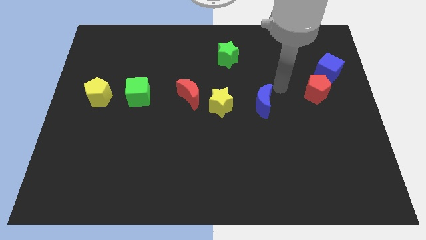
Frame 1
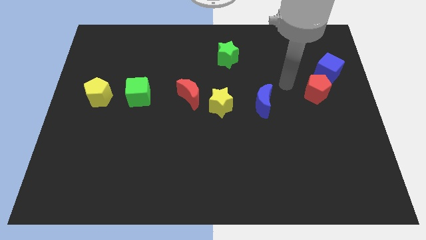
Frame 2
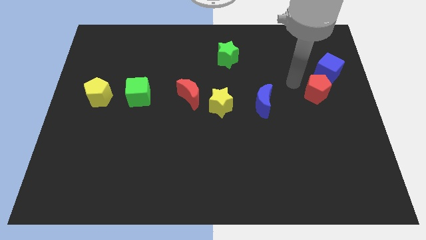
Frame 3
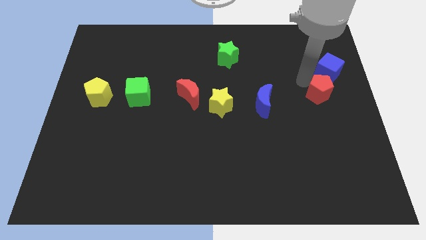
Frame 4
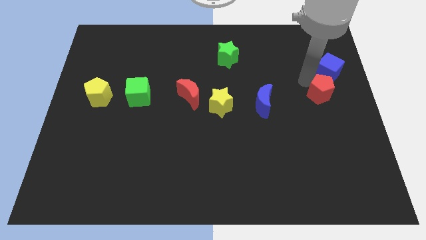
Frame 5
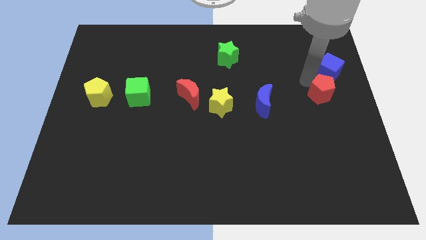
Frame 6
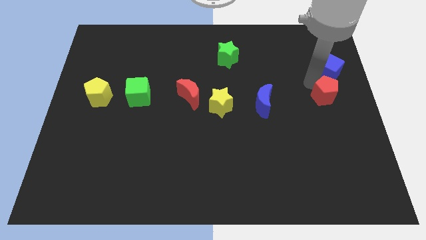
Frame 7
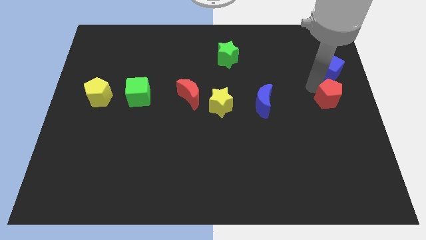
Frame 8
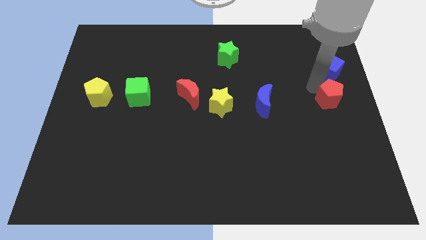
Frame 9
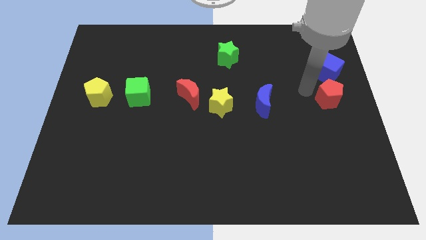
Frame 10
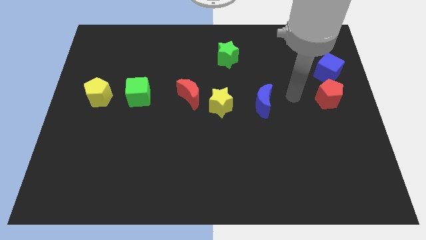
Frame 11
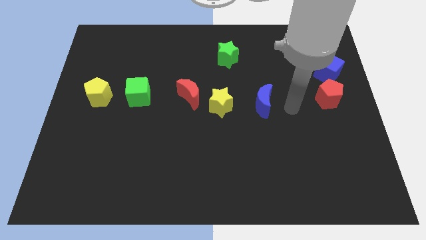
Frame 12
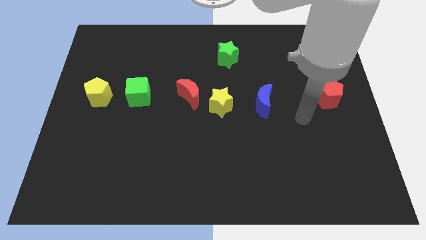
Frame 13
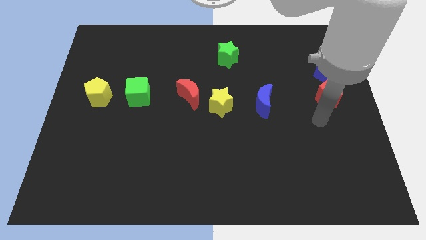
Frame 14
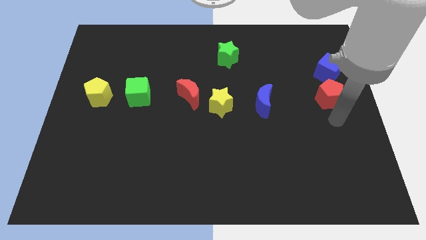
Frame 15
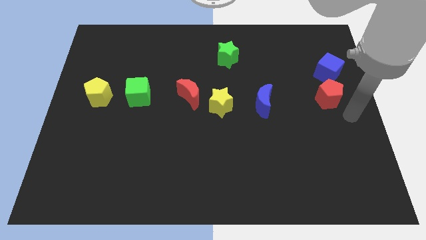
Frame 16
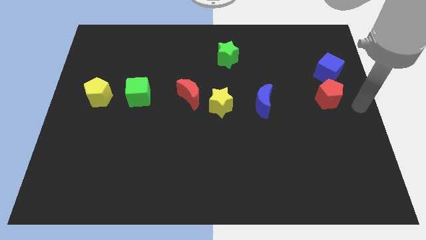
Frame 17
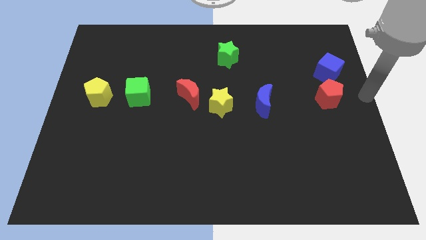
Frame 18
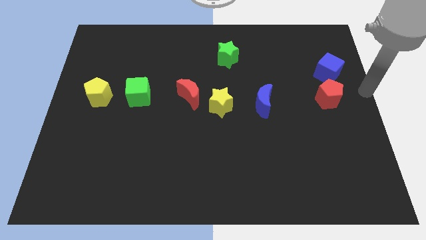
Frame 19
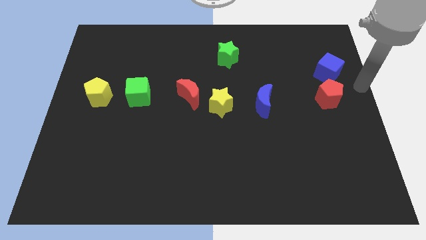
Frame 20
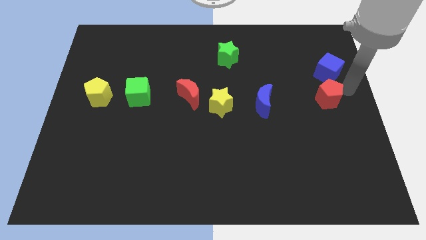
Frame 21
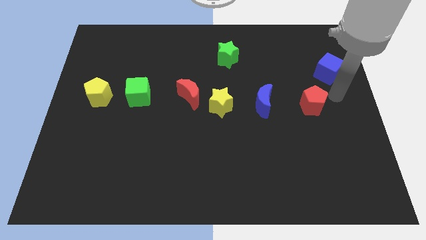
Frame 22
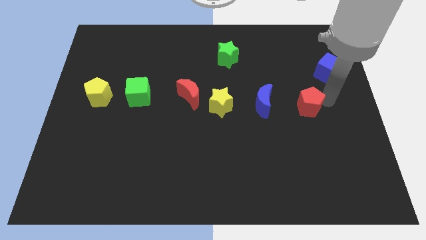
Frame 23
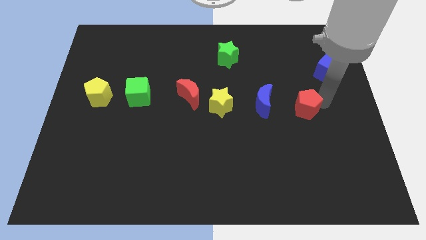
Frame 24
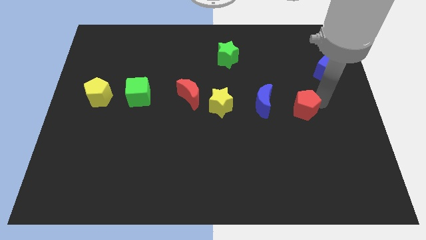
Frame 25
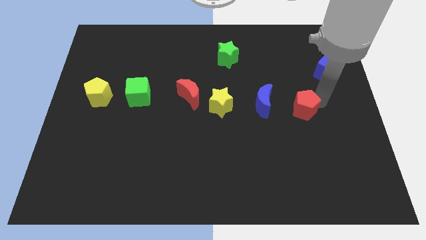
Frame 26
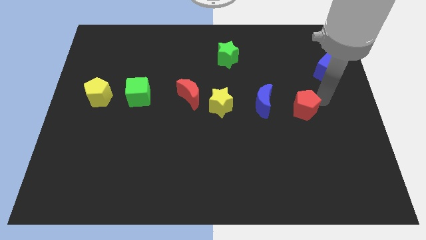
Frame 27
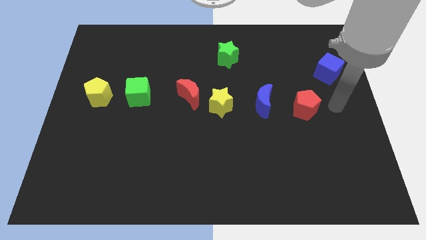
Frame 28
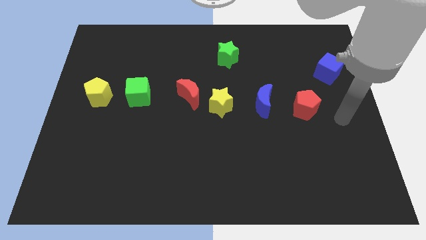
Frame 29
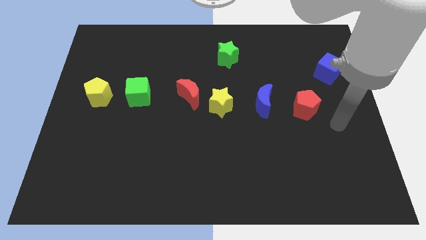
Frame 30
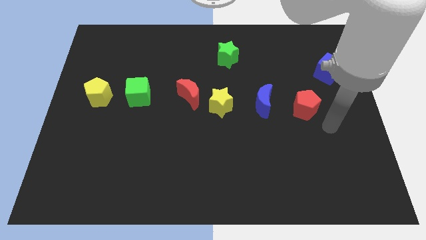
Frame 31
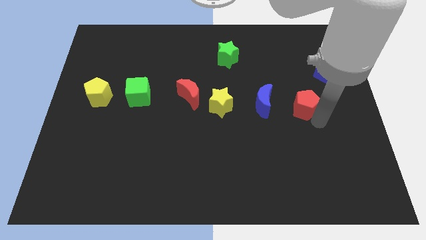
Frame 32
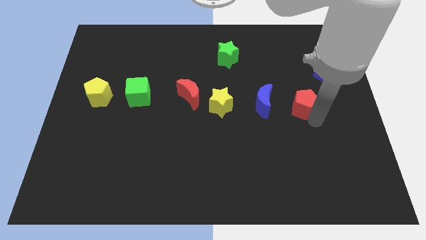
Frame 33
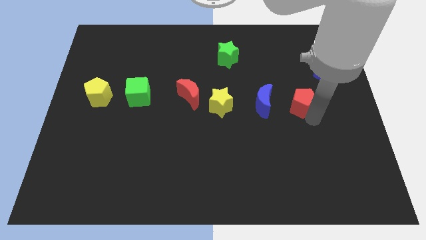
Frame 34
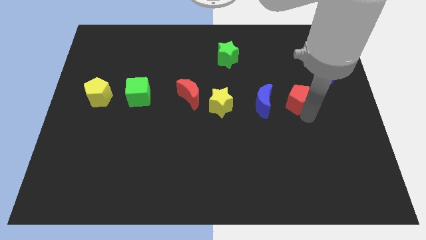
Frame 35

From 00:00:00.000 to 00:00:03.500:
place the red pentagon to the right of blue moon

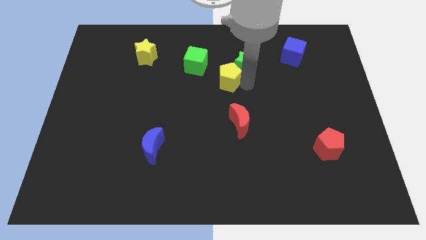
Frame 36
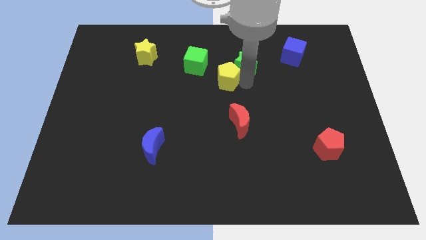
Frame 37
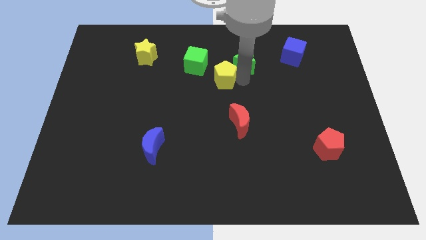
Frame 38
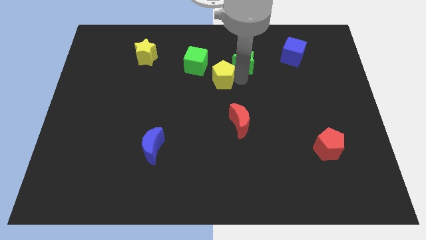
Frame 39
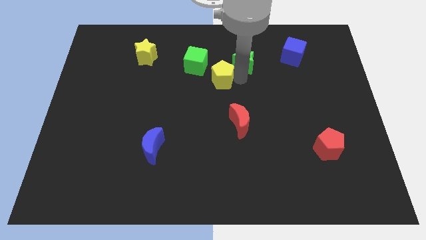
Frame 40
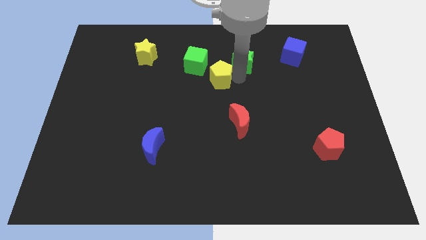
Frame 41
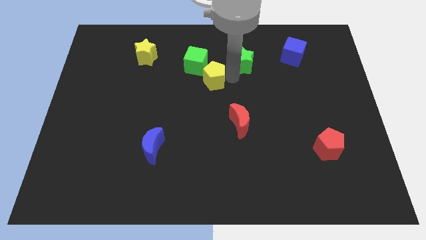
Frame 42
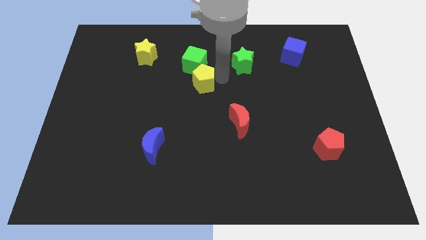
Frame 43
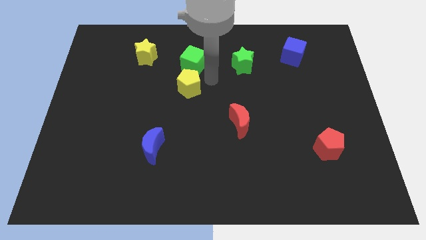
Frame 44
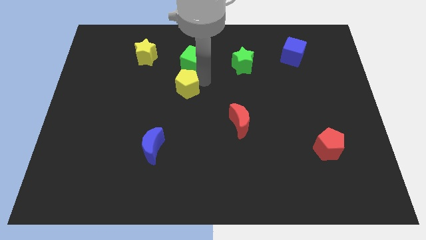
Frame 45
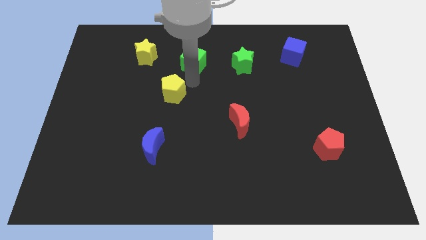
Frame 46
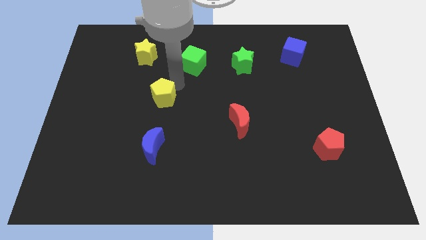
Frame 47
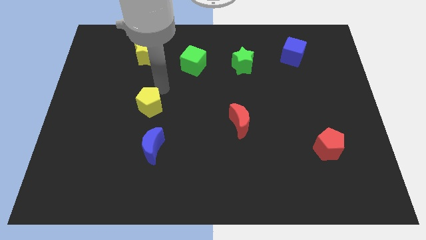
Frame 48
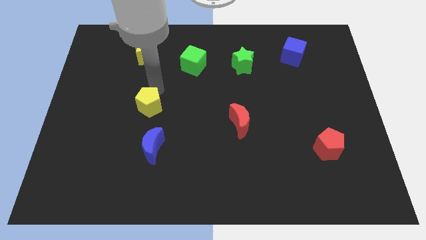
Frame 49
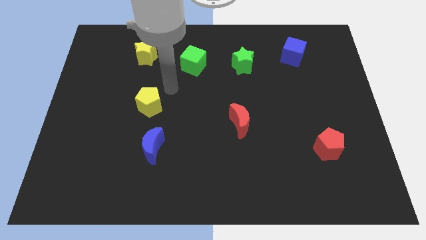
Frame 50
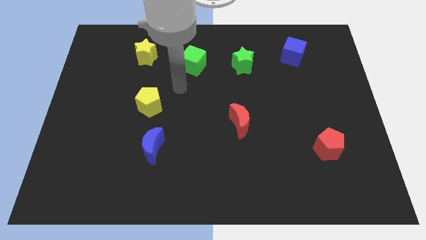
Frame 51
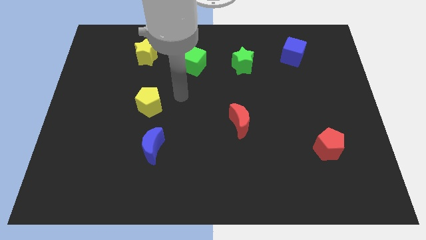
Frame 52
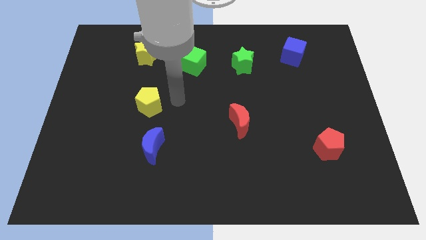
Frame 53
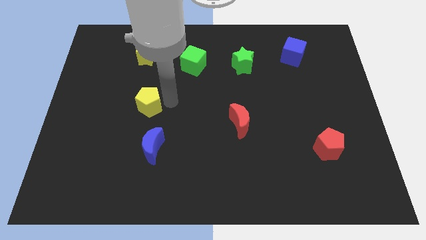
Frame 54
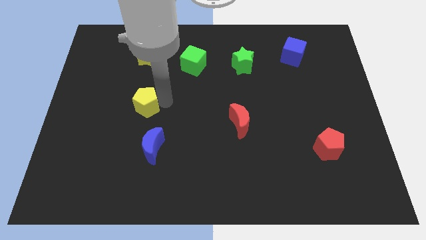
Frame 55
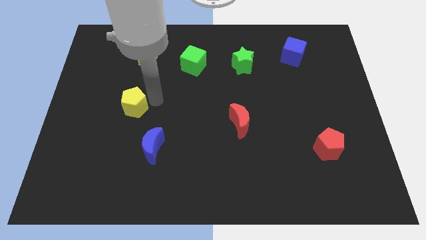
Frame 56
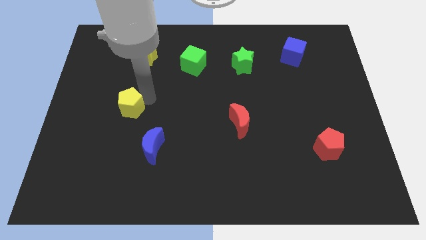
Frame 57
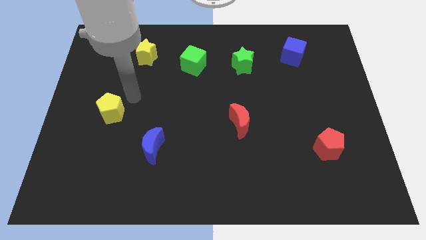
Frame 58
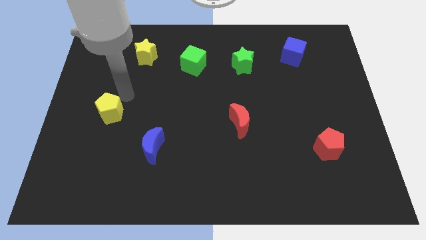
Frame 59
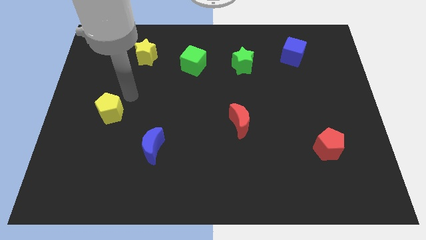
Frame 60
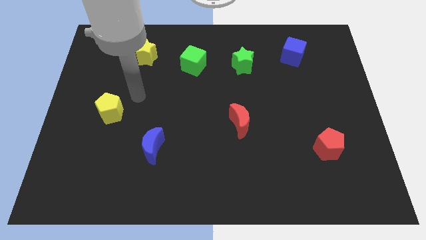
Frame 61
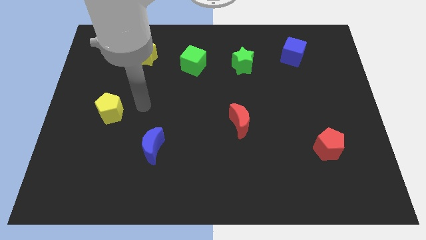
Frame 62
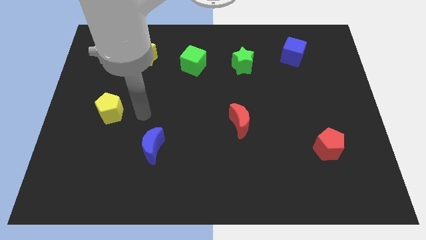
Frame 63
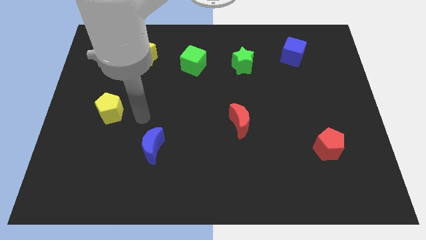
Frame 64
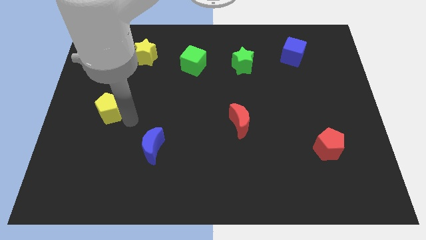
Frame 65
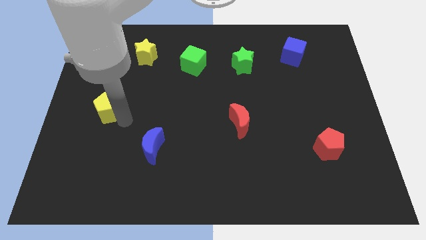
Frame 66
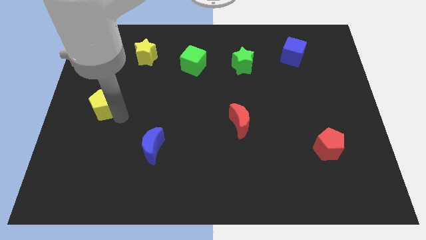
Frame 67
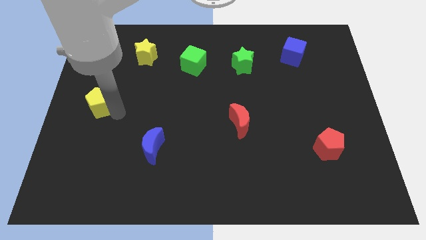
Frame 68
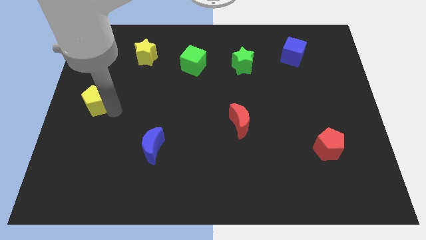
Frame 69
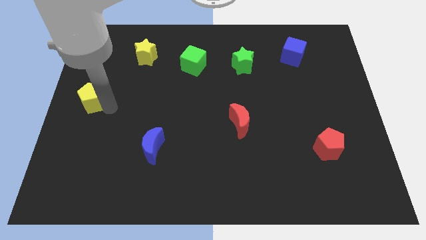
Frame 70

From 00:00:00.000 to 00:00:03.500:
touch the green blocks with yellow pentagon and move it to the left side

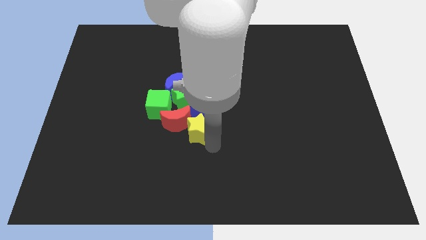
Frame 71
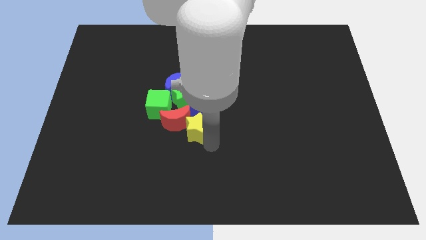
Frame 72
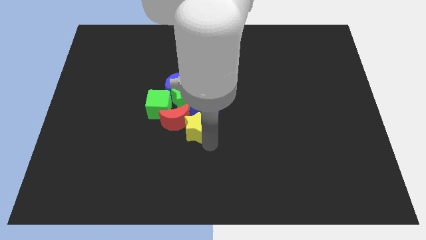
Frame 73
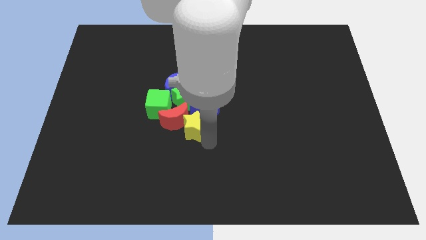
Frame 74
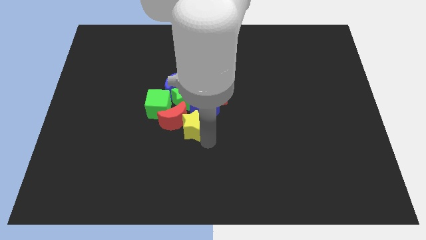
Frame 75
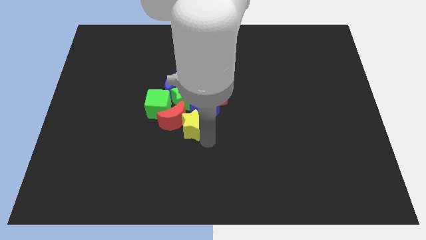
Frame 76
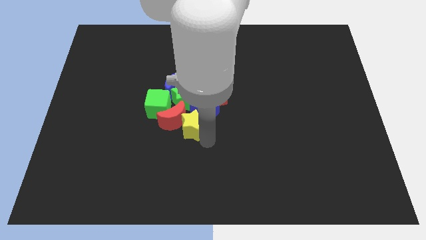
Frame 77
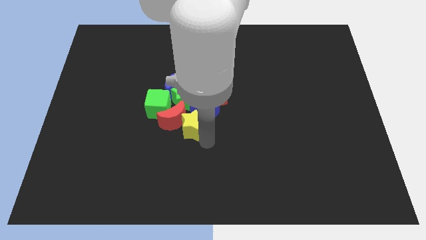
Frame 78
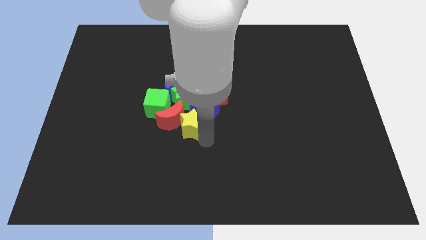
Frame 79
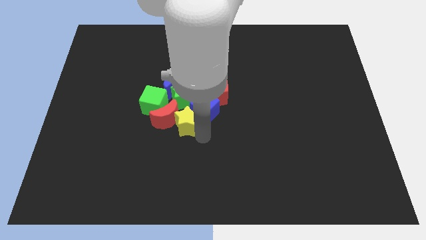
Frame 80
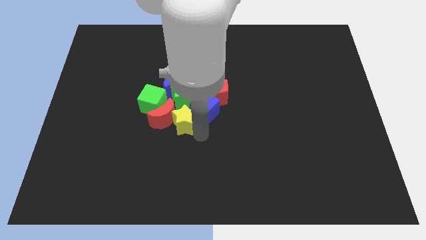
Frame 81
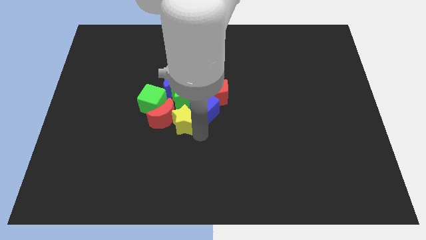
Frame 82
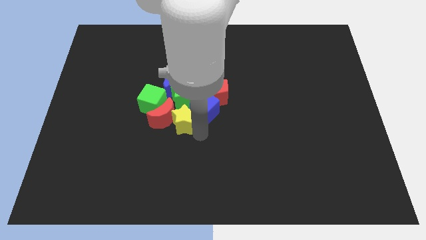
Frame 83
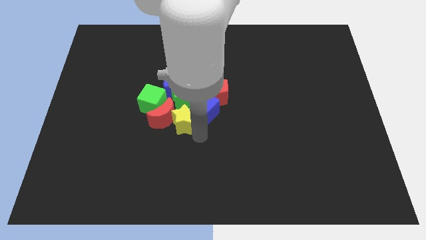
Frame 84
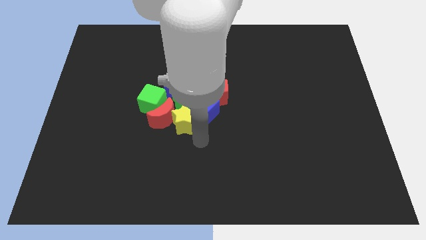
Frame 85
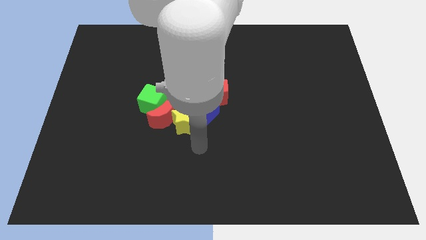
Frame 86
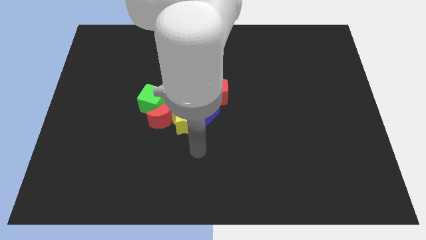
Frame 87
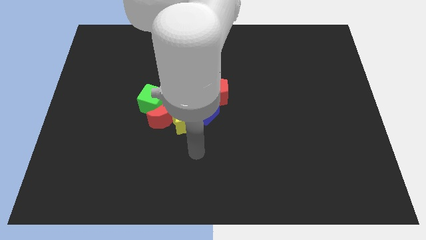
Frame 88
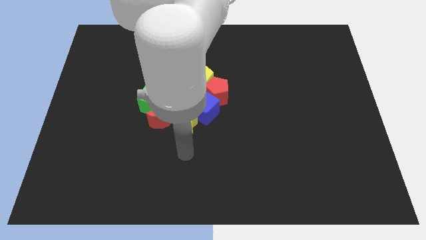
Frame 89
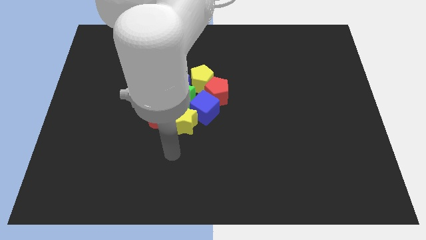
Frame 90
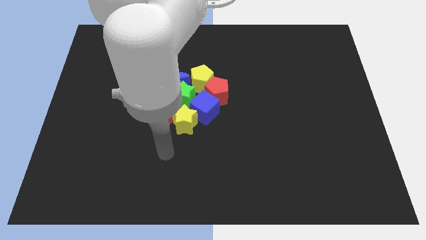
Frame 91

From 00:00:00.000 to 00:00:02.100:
push the yellow star into a group of blocks
